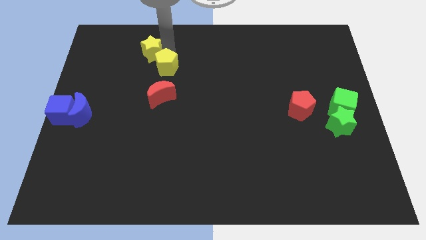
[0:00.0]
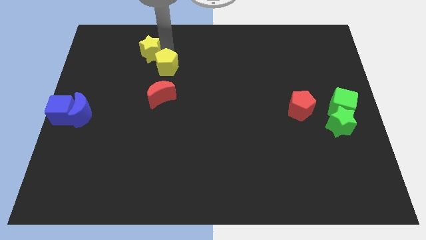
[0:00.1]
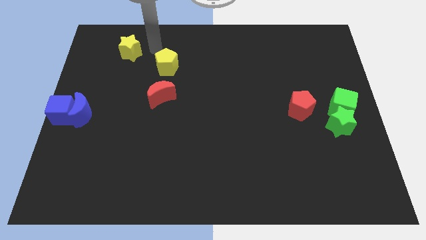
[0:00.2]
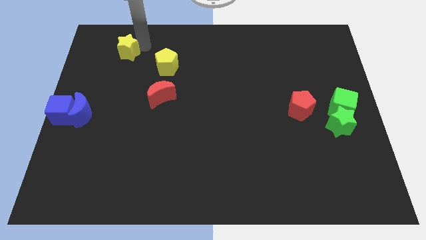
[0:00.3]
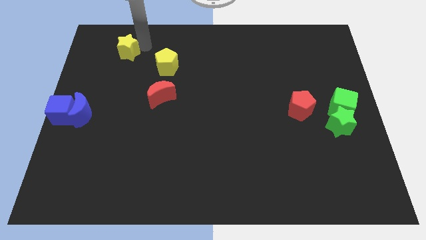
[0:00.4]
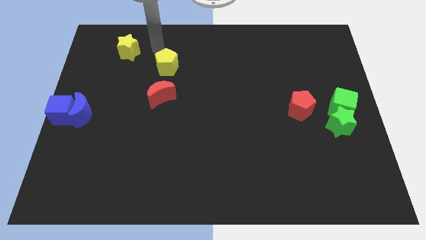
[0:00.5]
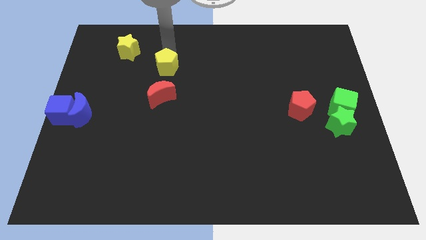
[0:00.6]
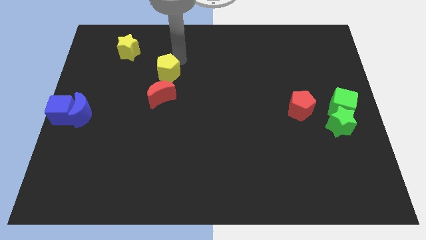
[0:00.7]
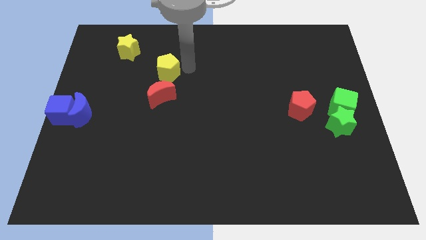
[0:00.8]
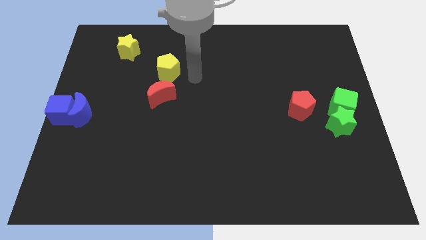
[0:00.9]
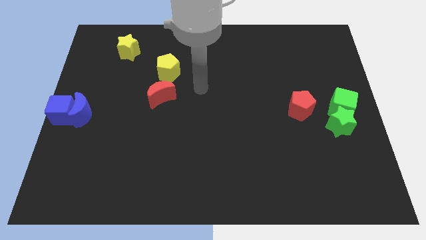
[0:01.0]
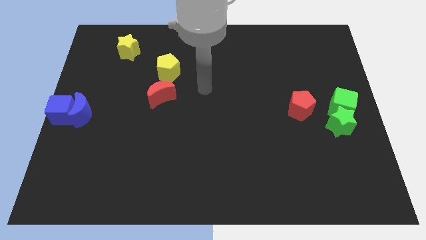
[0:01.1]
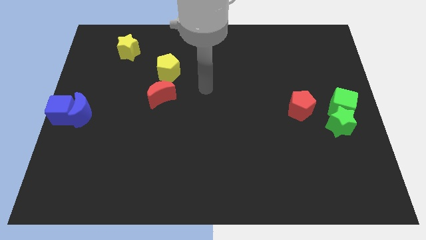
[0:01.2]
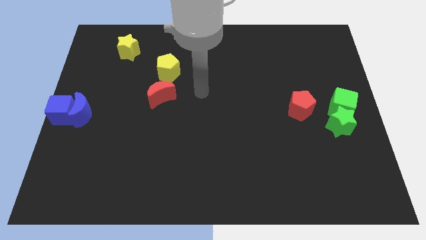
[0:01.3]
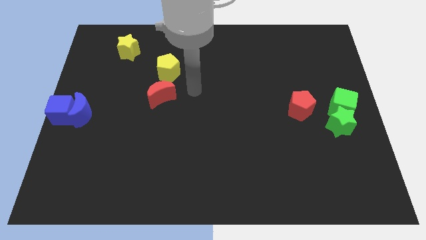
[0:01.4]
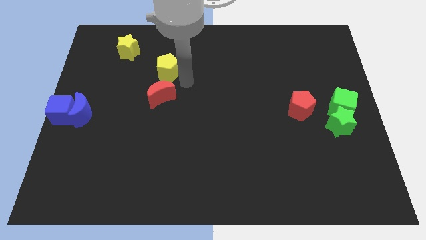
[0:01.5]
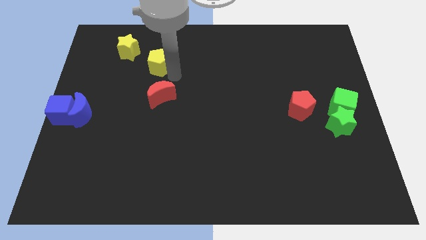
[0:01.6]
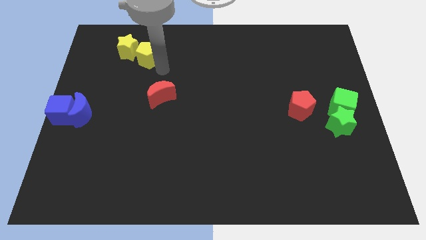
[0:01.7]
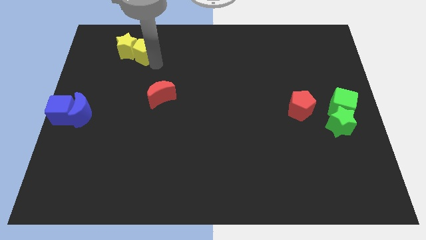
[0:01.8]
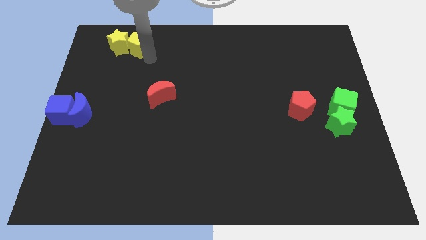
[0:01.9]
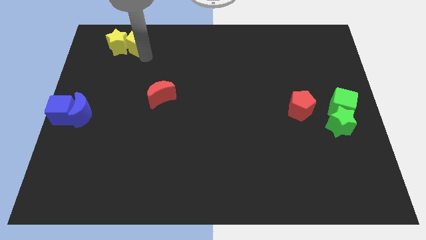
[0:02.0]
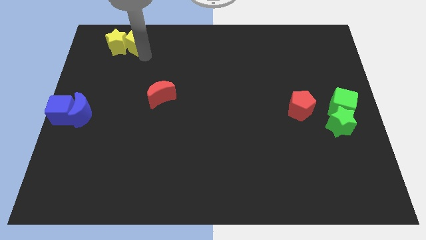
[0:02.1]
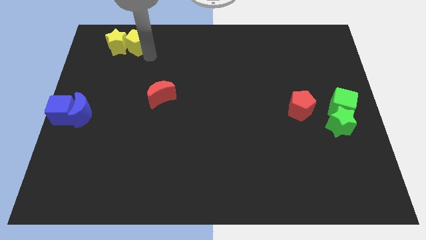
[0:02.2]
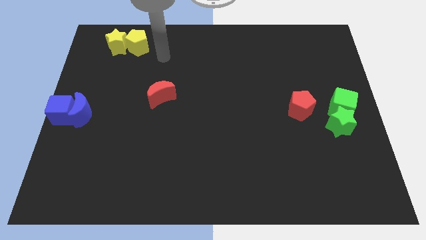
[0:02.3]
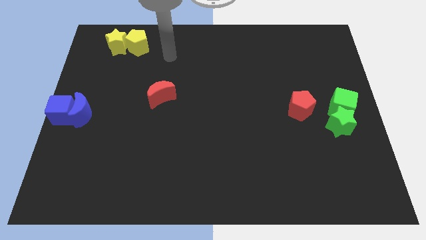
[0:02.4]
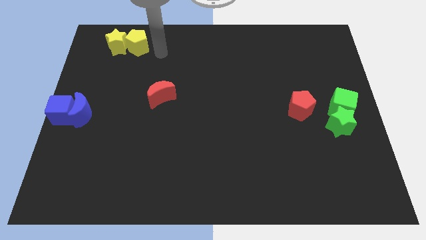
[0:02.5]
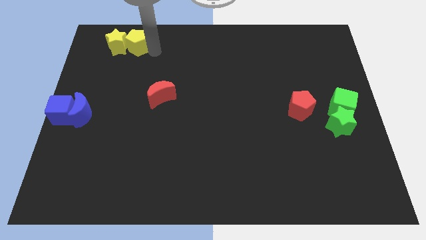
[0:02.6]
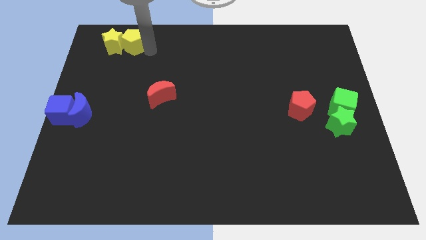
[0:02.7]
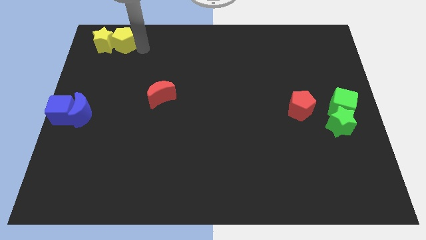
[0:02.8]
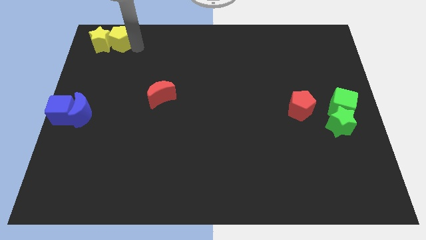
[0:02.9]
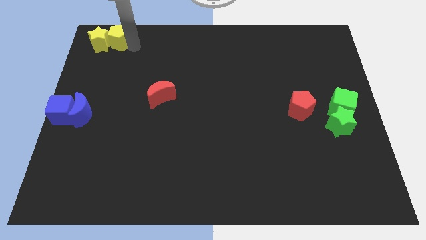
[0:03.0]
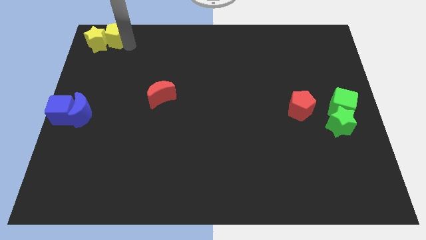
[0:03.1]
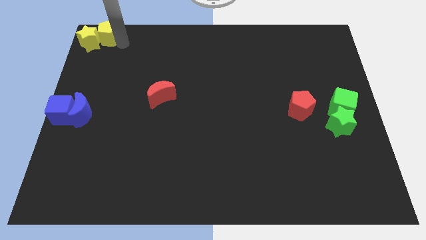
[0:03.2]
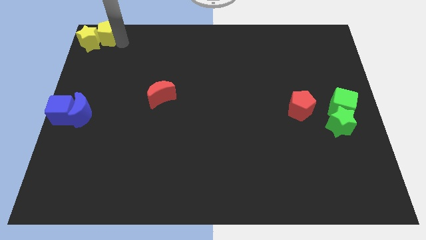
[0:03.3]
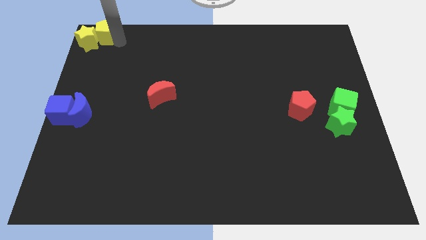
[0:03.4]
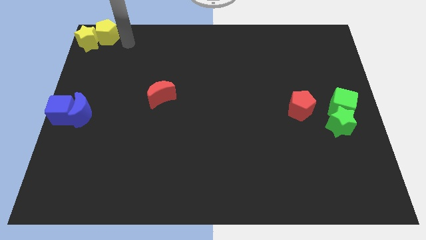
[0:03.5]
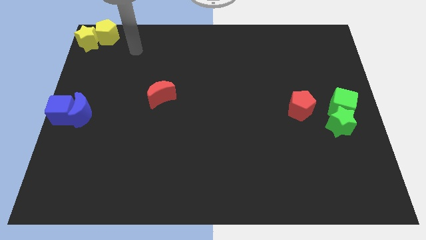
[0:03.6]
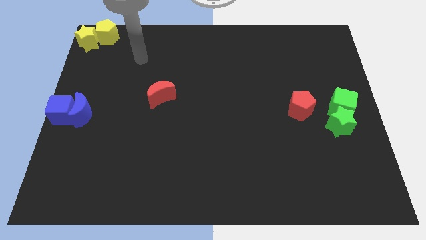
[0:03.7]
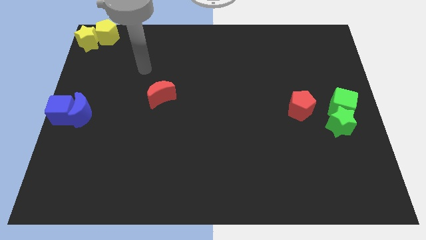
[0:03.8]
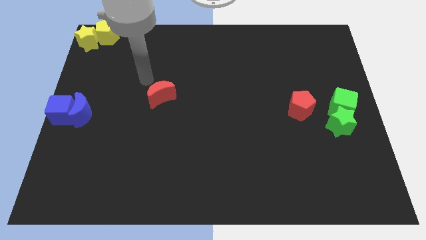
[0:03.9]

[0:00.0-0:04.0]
push the yellow star and yellow pentagon towards top left corner of the board

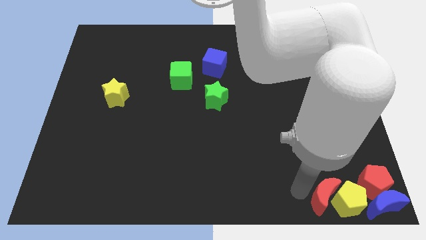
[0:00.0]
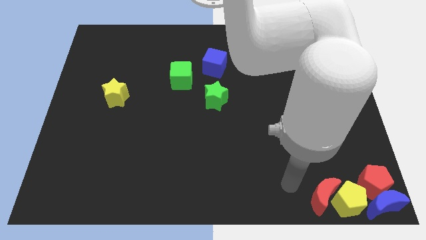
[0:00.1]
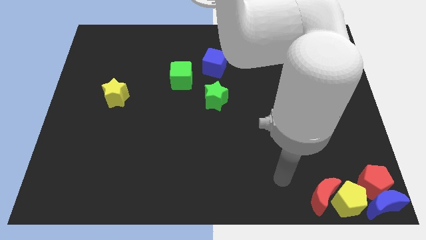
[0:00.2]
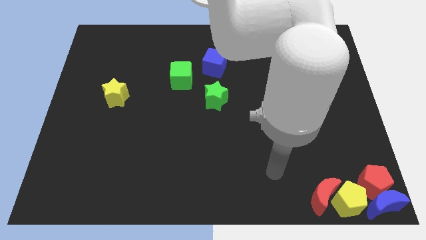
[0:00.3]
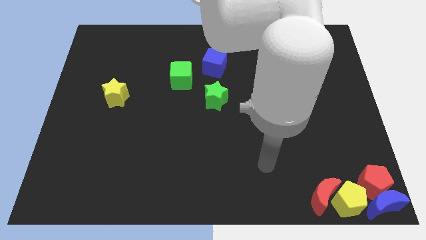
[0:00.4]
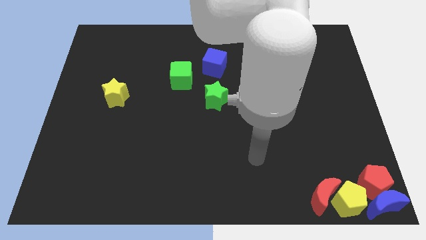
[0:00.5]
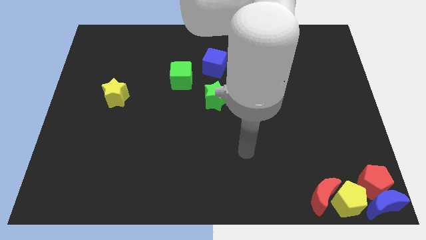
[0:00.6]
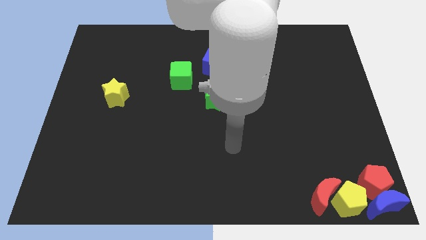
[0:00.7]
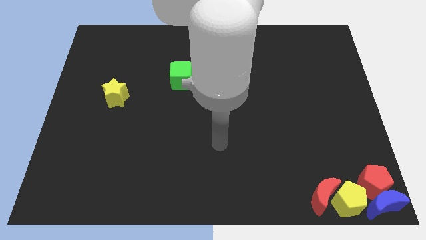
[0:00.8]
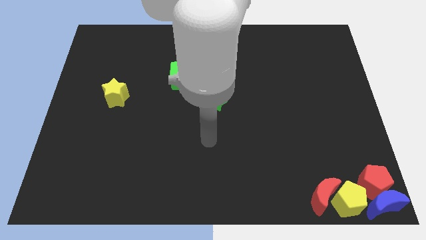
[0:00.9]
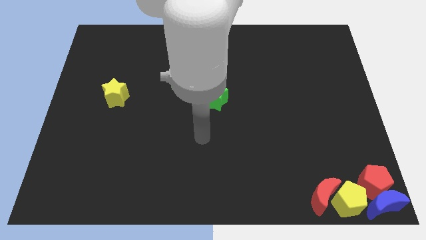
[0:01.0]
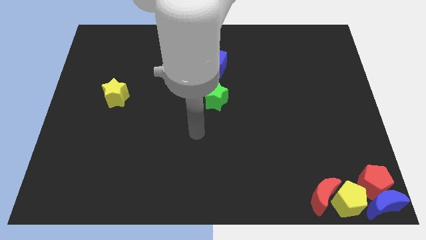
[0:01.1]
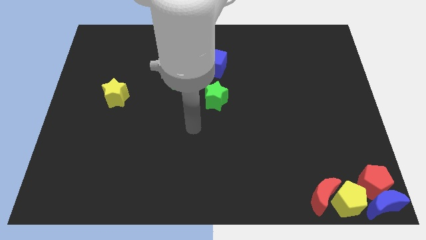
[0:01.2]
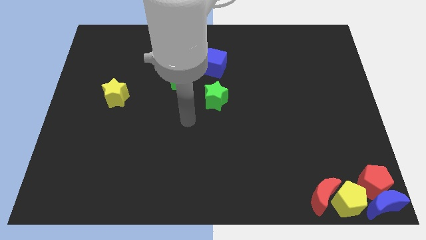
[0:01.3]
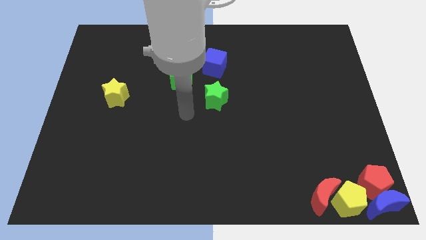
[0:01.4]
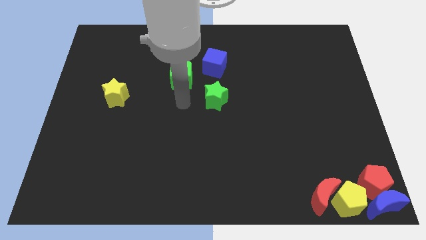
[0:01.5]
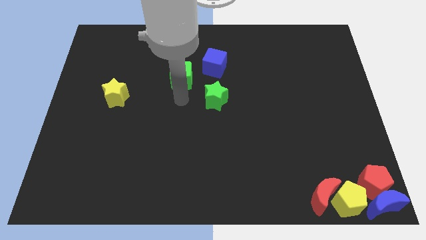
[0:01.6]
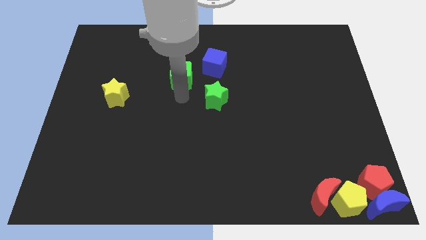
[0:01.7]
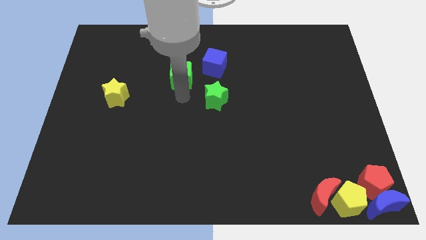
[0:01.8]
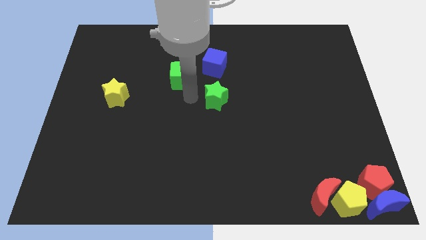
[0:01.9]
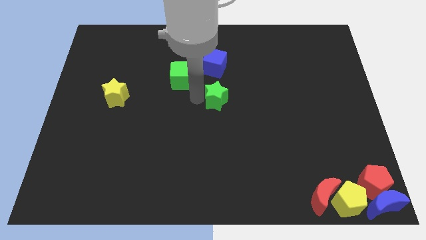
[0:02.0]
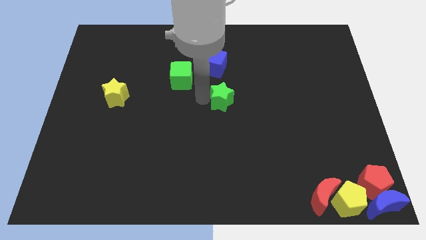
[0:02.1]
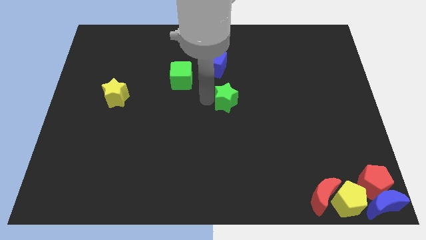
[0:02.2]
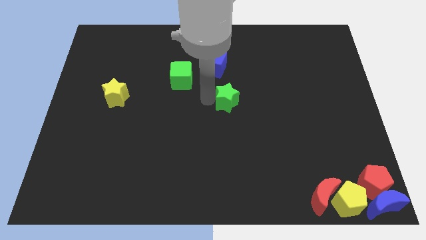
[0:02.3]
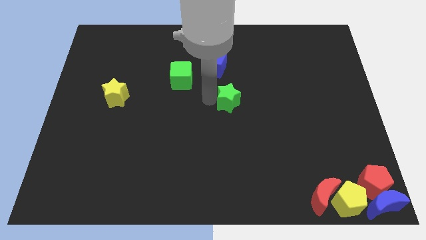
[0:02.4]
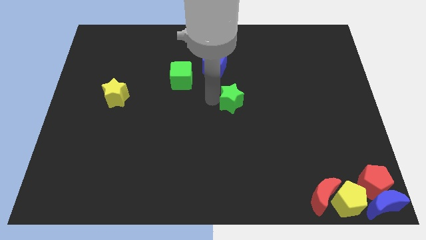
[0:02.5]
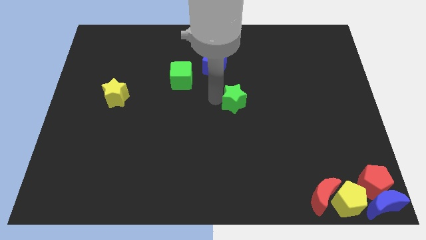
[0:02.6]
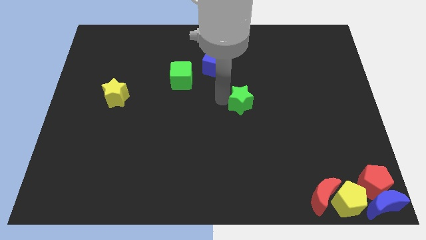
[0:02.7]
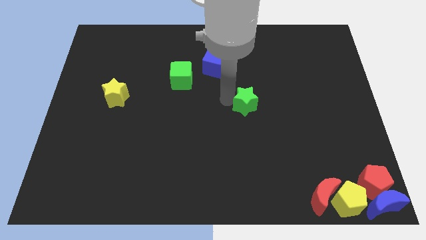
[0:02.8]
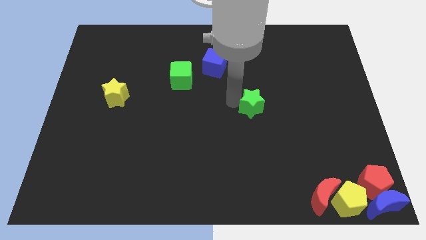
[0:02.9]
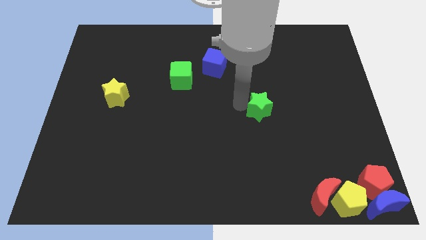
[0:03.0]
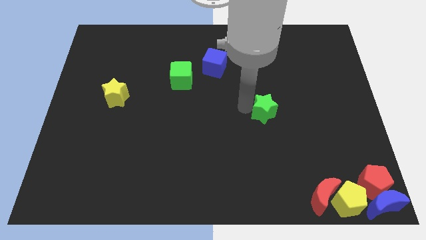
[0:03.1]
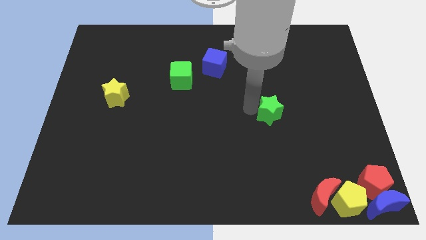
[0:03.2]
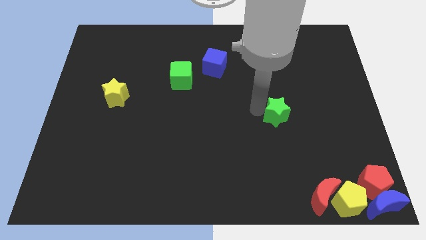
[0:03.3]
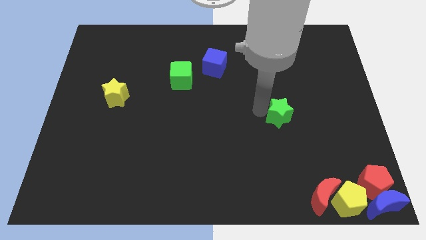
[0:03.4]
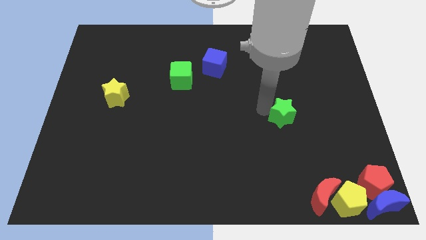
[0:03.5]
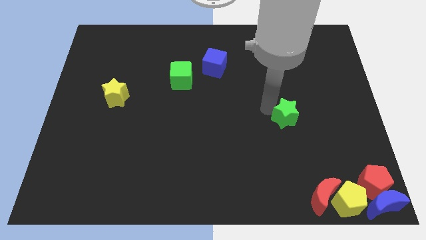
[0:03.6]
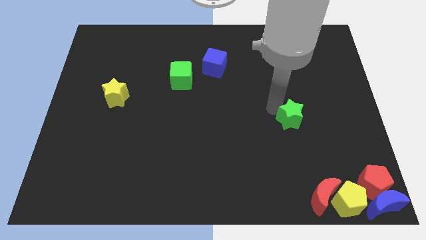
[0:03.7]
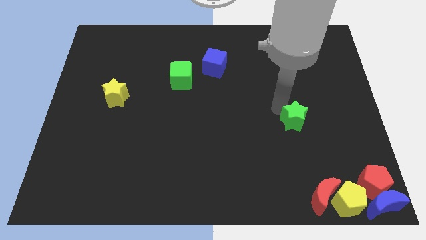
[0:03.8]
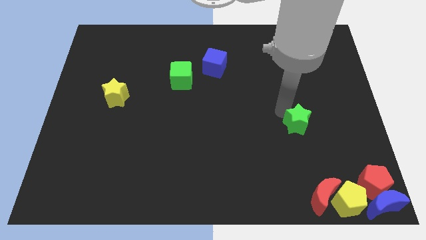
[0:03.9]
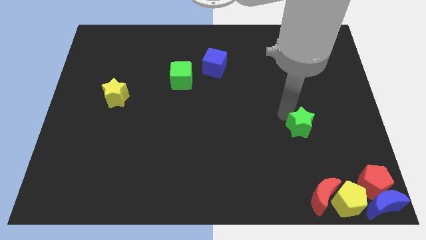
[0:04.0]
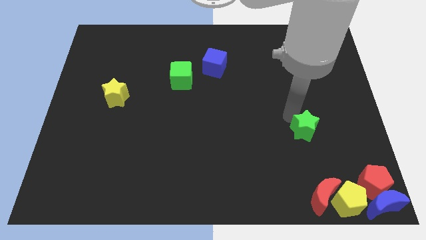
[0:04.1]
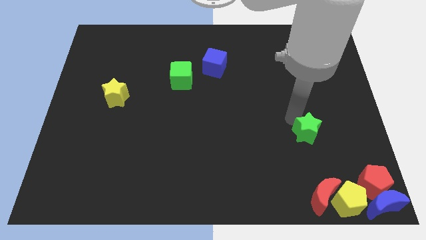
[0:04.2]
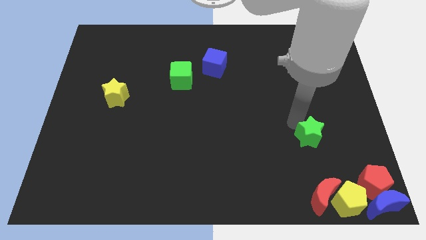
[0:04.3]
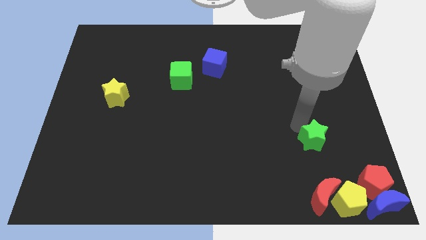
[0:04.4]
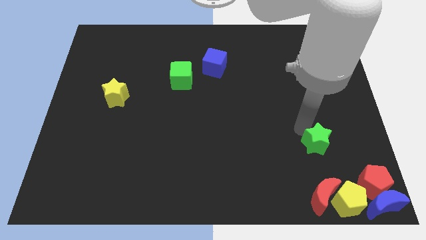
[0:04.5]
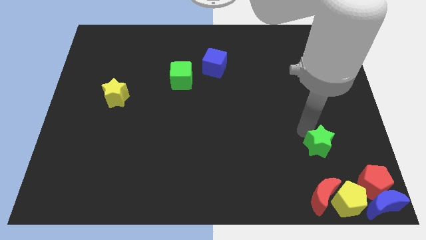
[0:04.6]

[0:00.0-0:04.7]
move the green star above the red moon

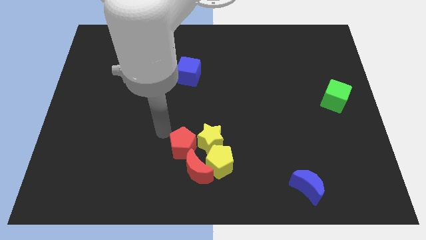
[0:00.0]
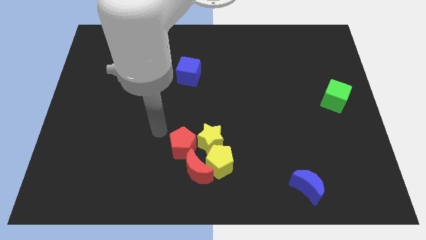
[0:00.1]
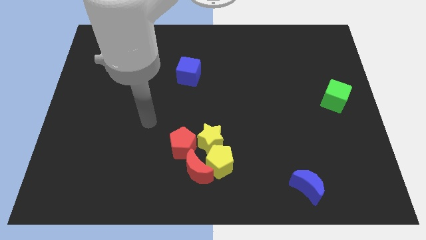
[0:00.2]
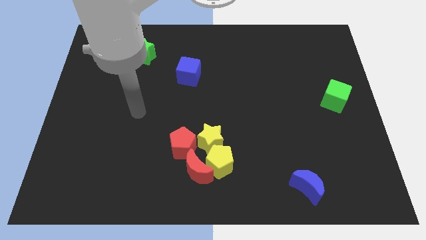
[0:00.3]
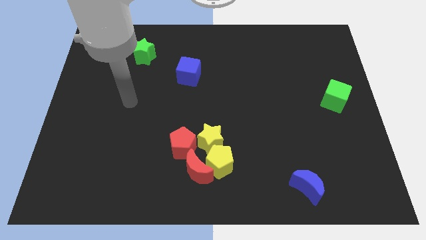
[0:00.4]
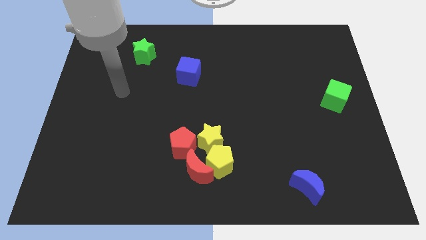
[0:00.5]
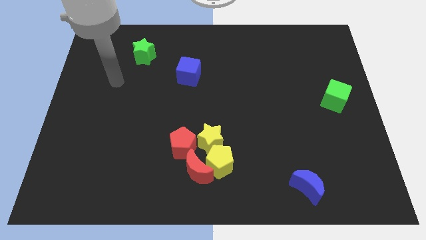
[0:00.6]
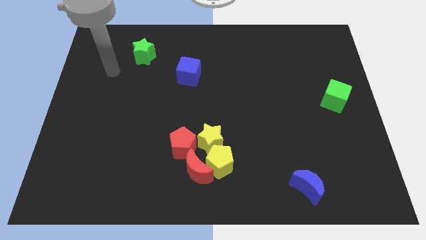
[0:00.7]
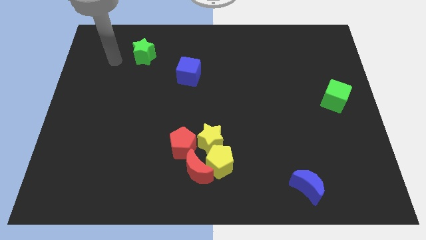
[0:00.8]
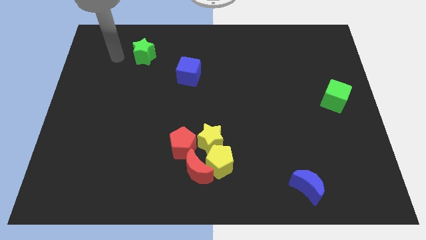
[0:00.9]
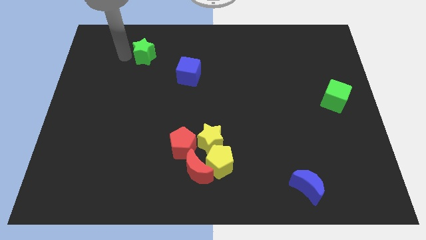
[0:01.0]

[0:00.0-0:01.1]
moev your arm to the left of the green star
